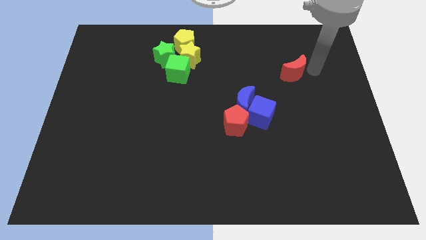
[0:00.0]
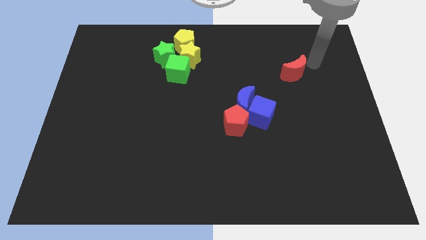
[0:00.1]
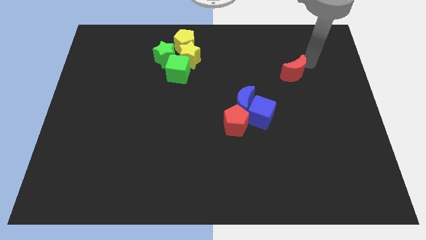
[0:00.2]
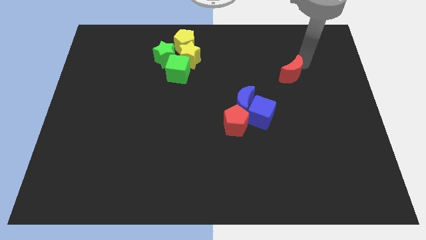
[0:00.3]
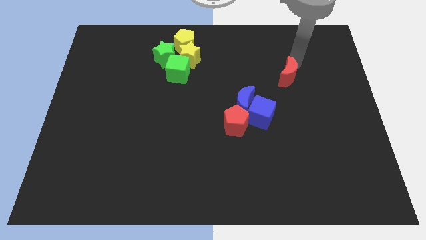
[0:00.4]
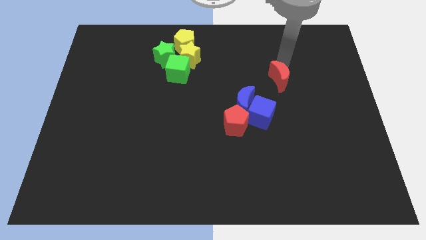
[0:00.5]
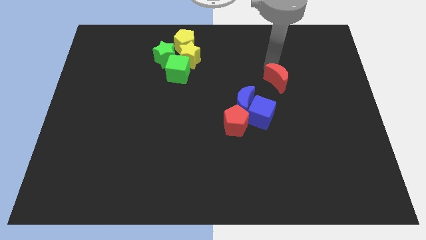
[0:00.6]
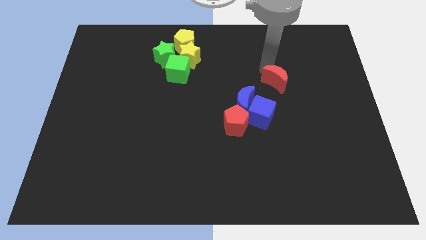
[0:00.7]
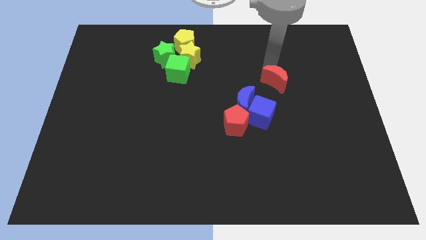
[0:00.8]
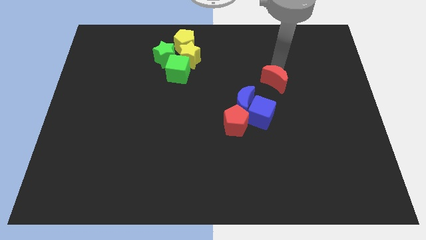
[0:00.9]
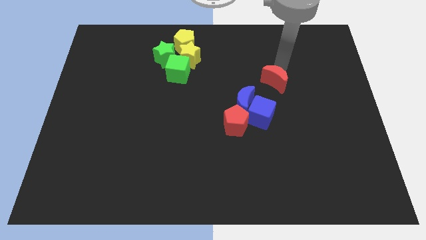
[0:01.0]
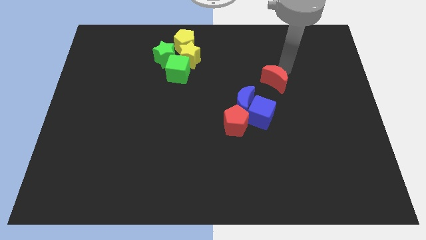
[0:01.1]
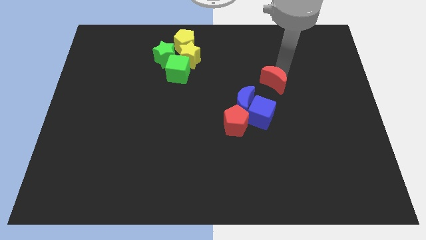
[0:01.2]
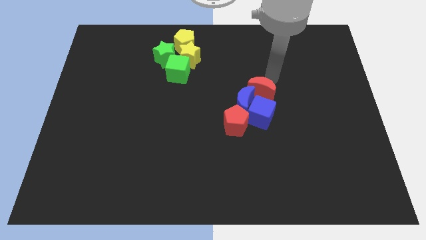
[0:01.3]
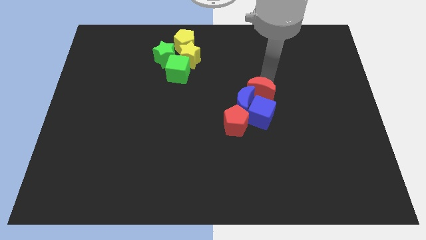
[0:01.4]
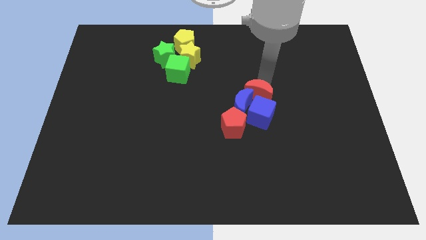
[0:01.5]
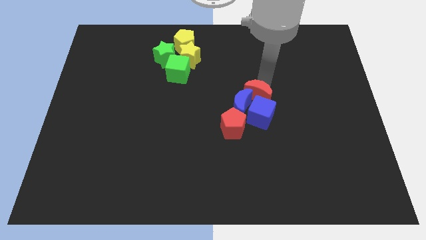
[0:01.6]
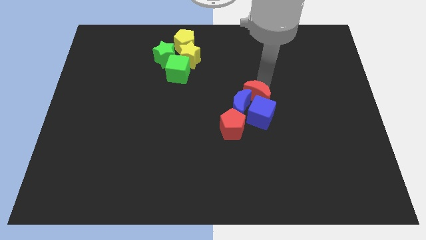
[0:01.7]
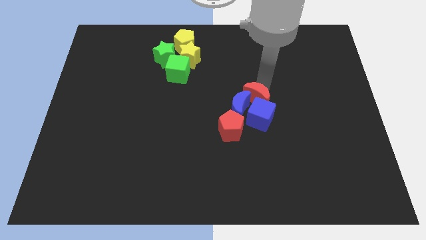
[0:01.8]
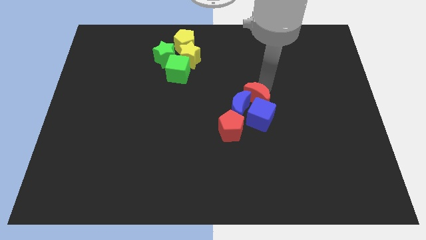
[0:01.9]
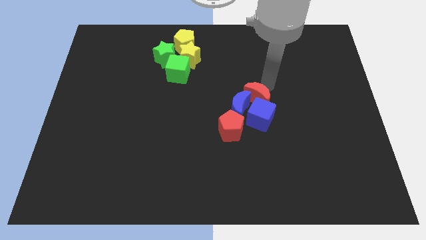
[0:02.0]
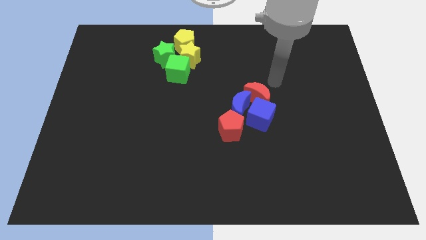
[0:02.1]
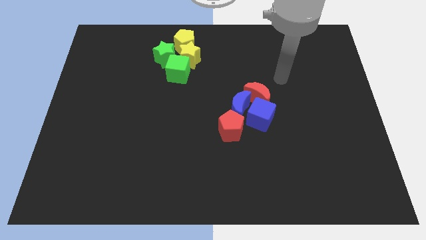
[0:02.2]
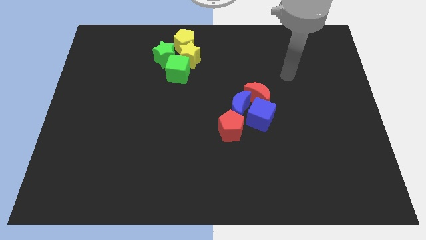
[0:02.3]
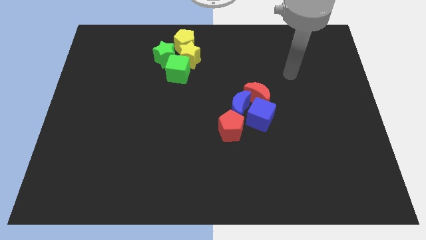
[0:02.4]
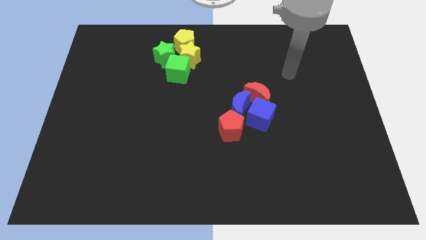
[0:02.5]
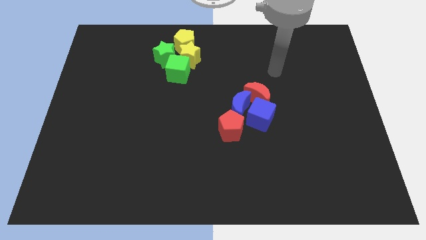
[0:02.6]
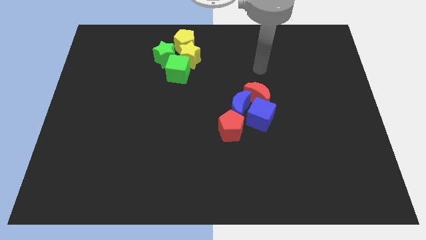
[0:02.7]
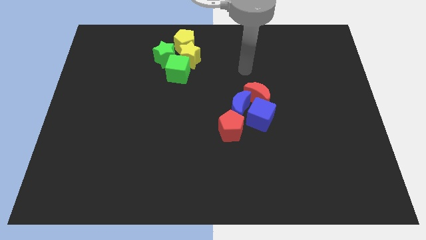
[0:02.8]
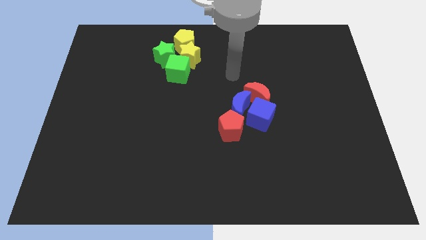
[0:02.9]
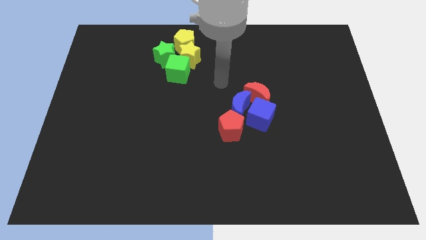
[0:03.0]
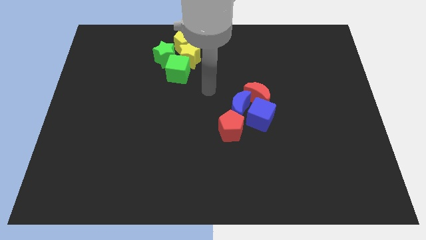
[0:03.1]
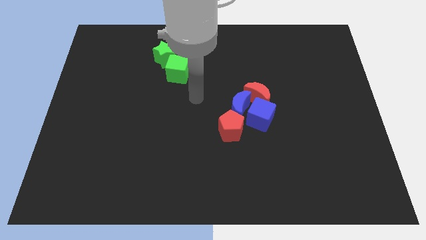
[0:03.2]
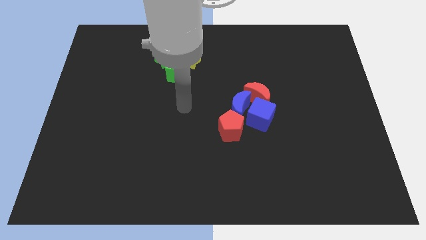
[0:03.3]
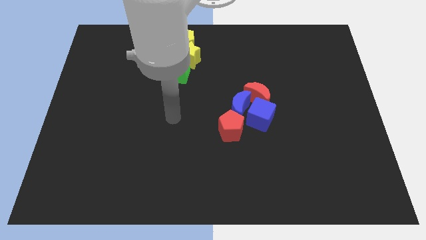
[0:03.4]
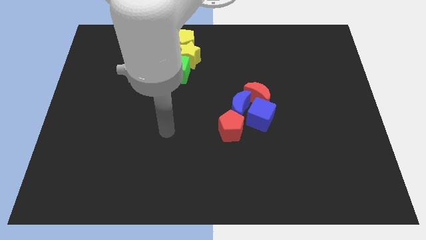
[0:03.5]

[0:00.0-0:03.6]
push the red crescent into the blue crescent

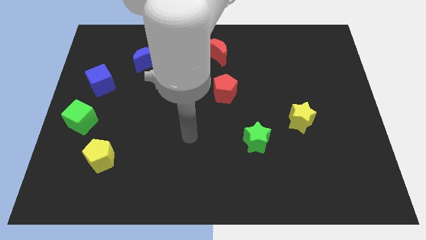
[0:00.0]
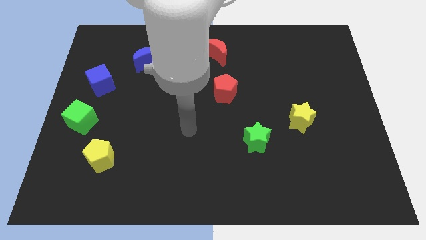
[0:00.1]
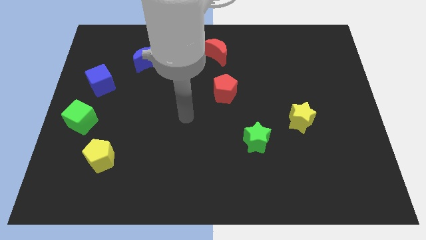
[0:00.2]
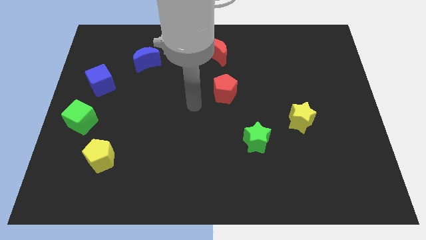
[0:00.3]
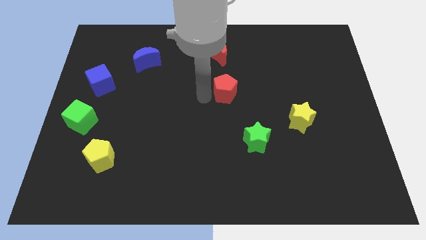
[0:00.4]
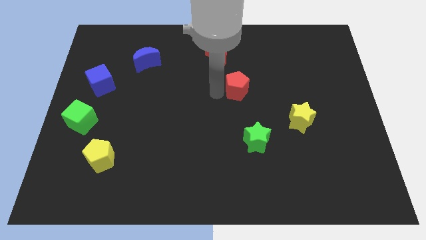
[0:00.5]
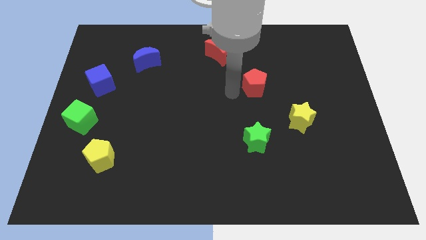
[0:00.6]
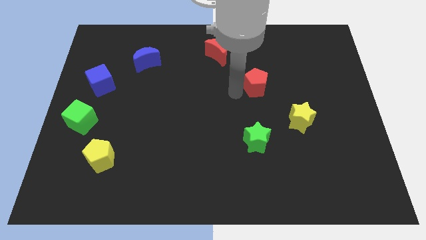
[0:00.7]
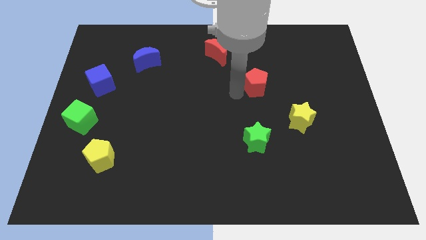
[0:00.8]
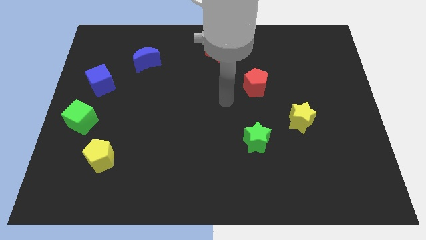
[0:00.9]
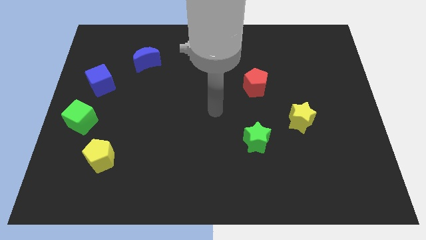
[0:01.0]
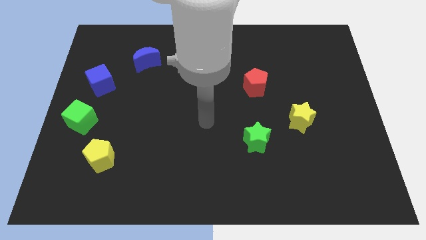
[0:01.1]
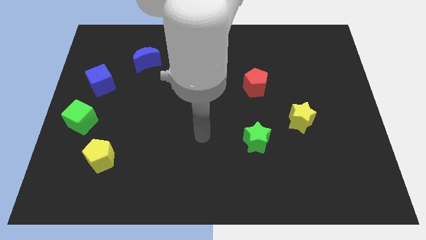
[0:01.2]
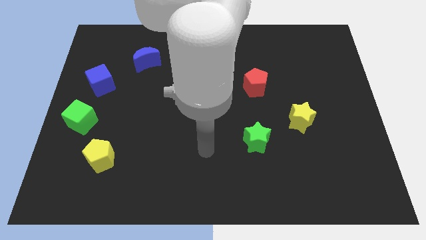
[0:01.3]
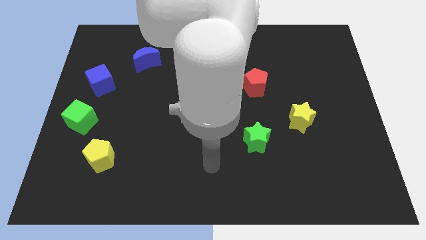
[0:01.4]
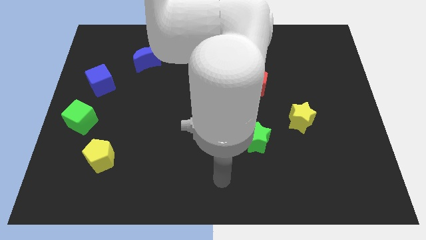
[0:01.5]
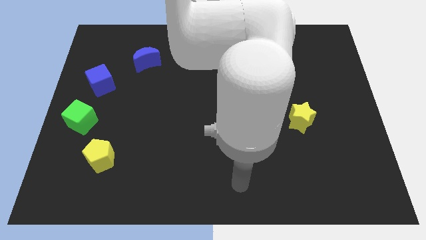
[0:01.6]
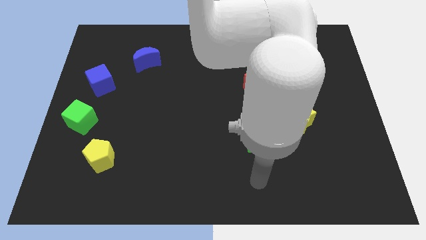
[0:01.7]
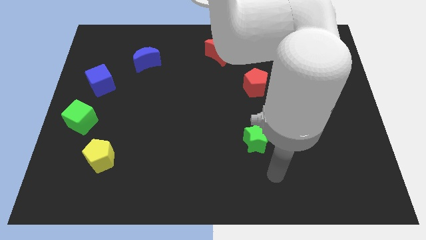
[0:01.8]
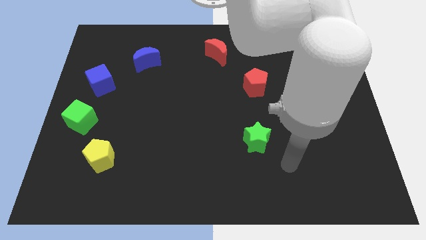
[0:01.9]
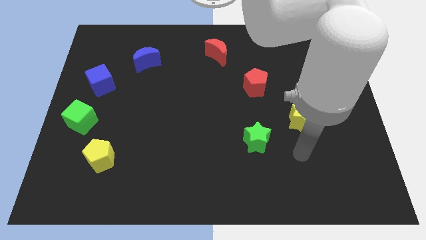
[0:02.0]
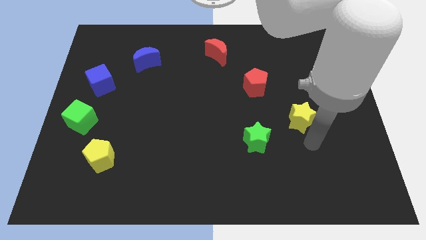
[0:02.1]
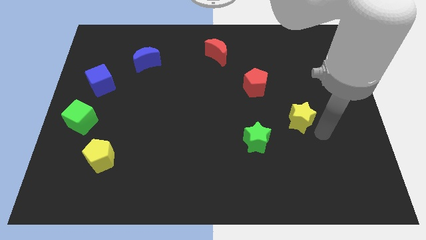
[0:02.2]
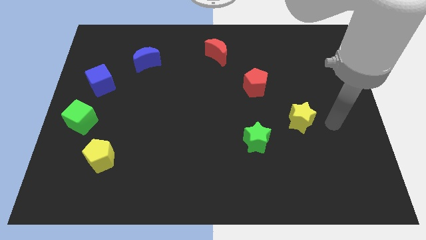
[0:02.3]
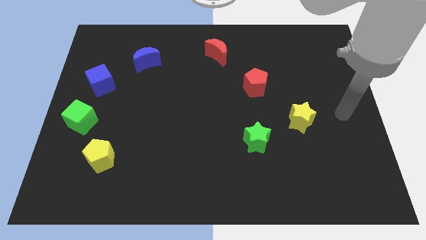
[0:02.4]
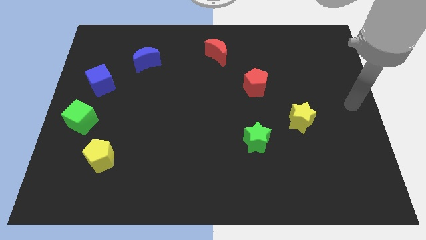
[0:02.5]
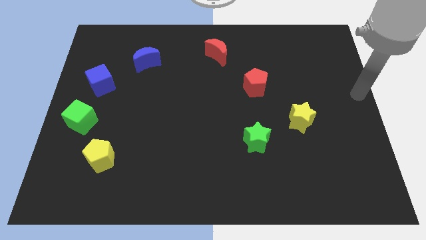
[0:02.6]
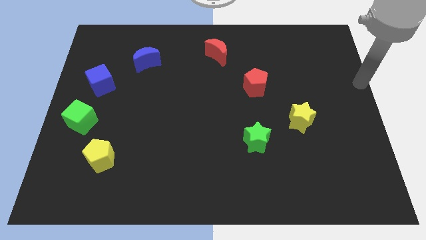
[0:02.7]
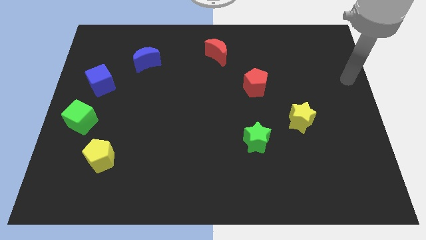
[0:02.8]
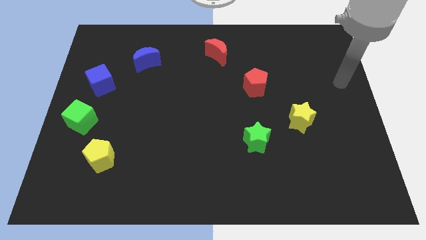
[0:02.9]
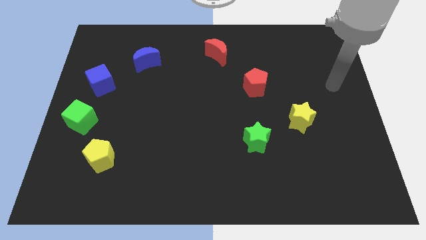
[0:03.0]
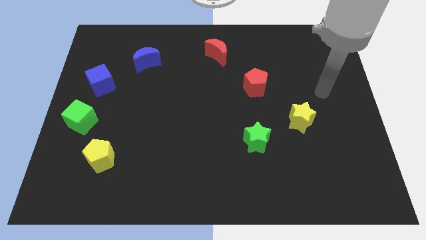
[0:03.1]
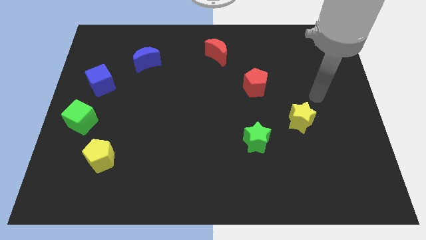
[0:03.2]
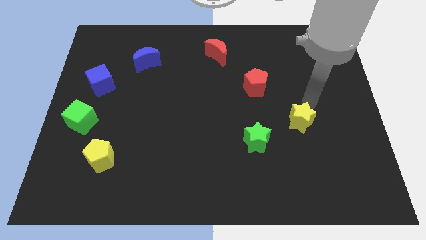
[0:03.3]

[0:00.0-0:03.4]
move the red pentagon parallel to the top of the green star

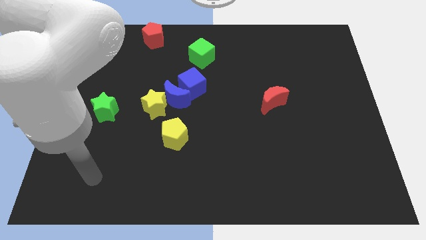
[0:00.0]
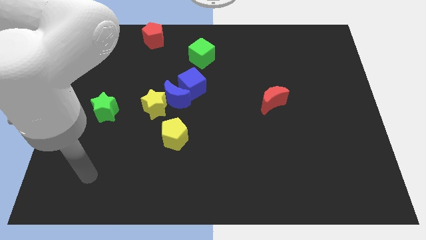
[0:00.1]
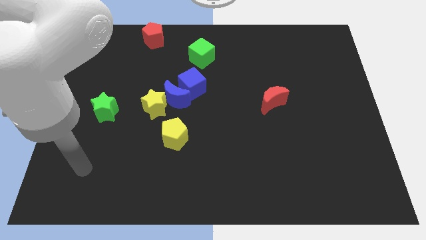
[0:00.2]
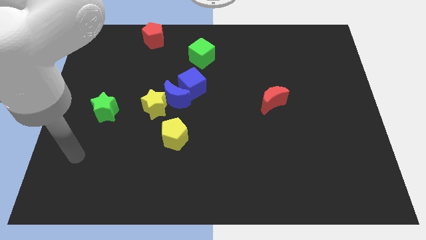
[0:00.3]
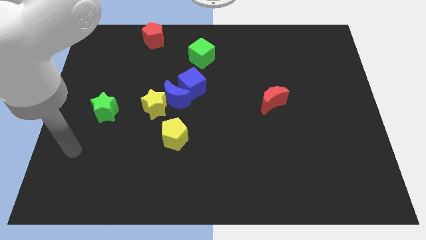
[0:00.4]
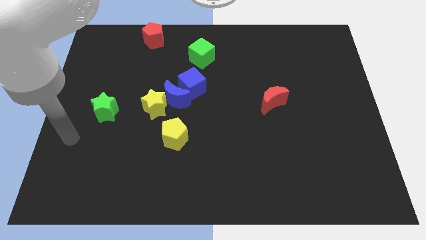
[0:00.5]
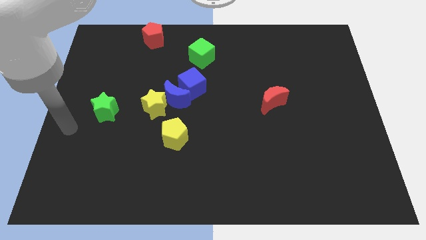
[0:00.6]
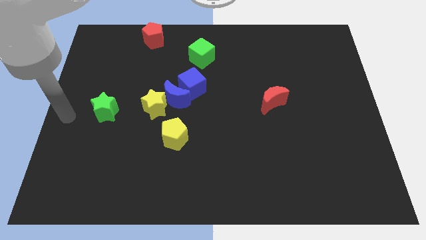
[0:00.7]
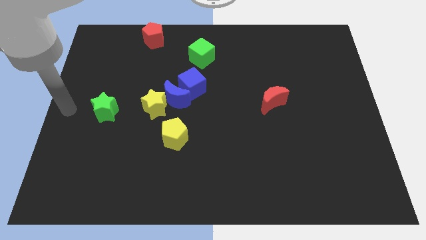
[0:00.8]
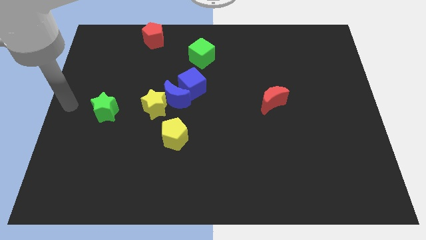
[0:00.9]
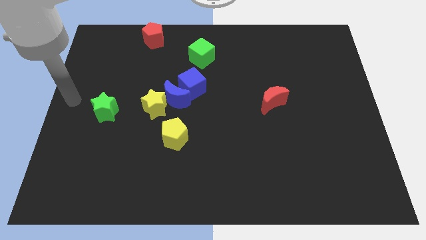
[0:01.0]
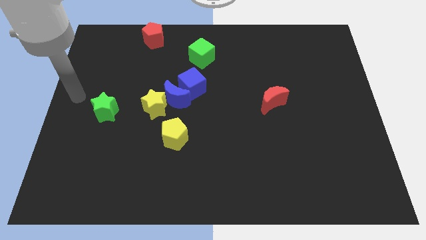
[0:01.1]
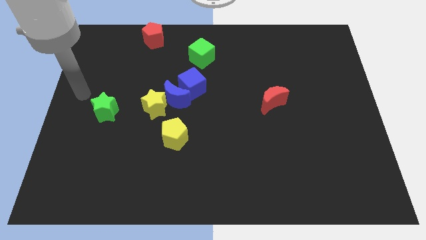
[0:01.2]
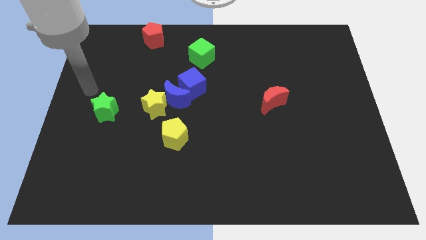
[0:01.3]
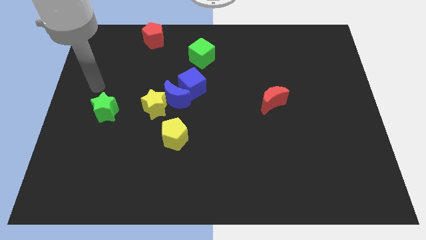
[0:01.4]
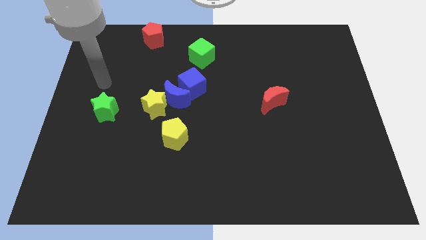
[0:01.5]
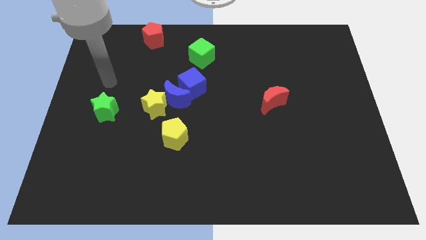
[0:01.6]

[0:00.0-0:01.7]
place your hand above the green star

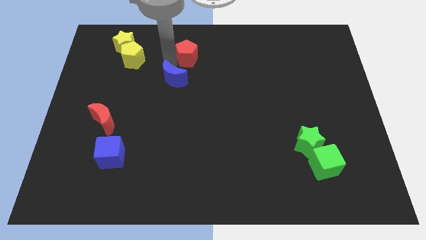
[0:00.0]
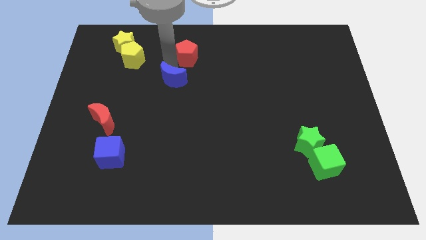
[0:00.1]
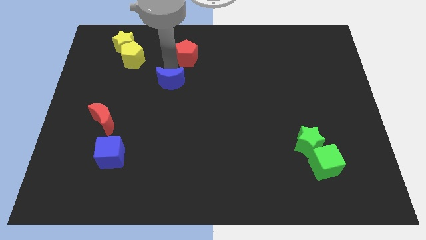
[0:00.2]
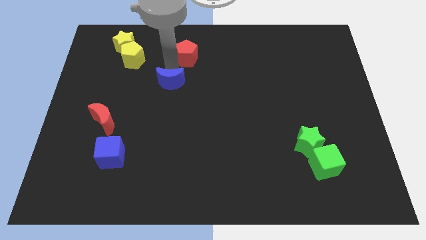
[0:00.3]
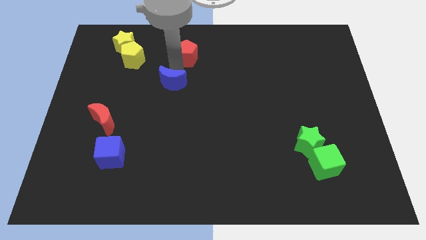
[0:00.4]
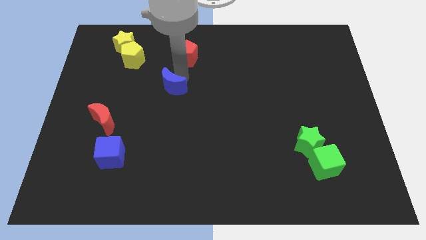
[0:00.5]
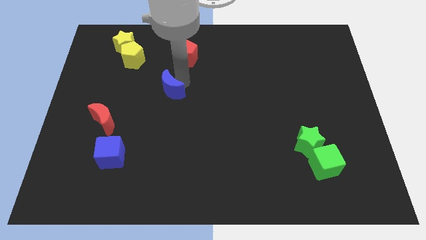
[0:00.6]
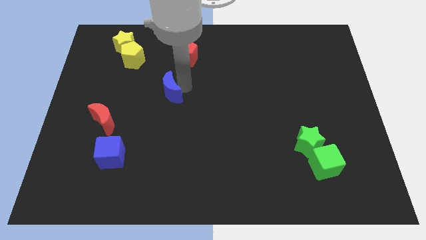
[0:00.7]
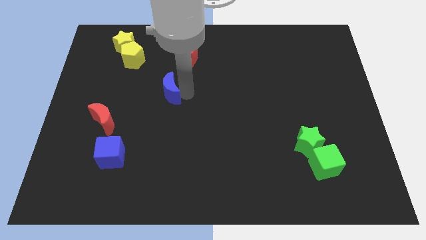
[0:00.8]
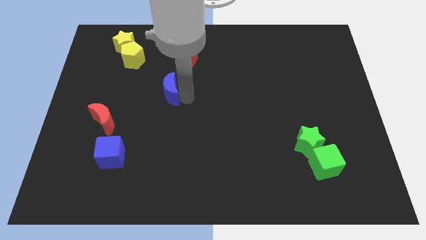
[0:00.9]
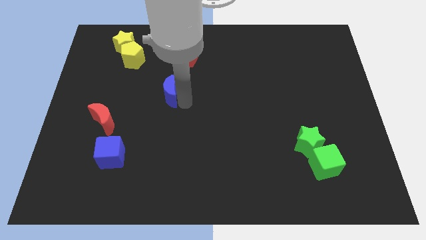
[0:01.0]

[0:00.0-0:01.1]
separate blue moon from red pentagon
